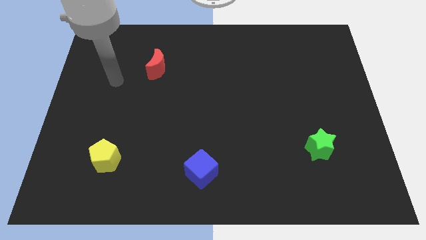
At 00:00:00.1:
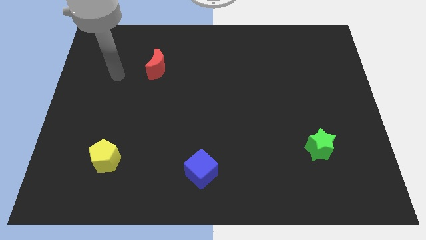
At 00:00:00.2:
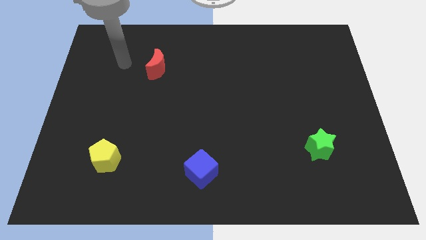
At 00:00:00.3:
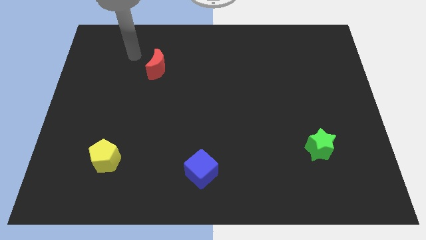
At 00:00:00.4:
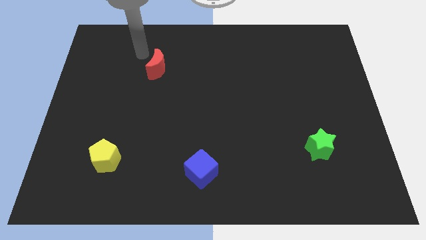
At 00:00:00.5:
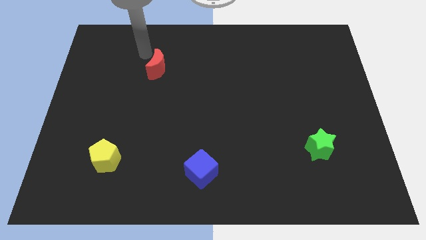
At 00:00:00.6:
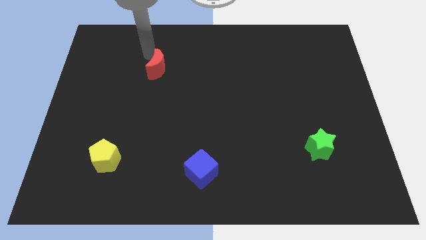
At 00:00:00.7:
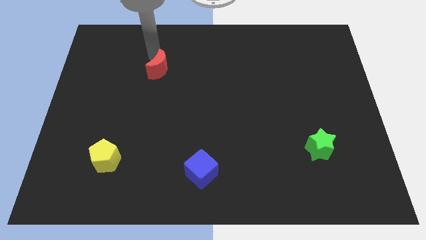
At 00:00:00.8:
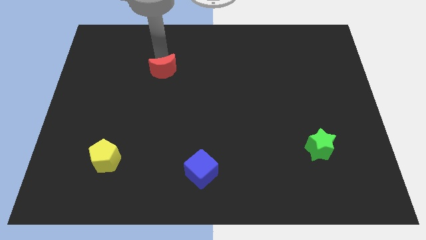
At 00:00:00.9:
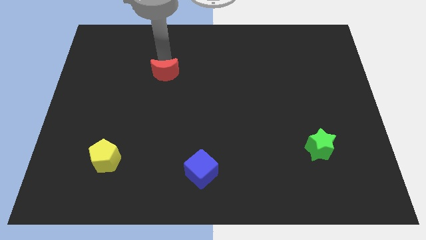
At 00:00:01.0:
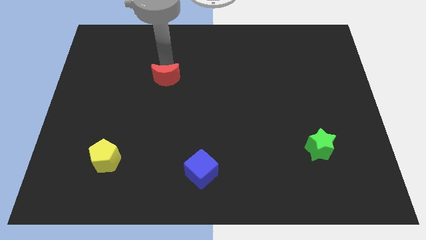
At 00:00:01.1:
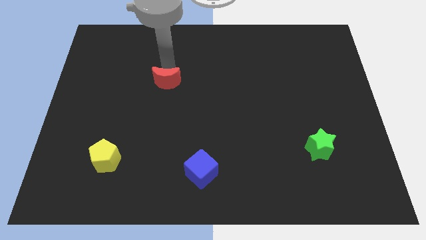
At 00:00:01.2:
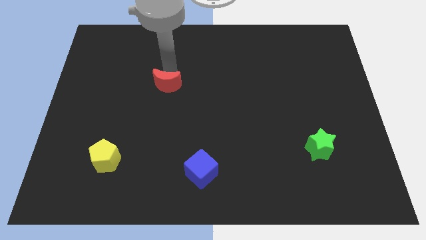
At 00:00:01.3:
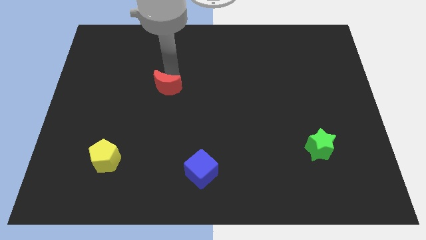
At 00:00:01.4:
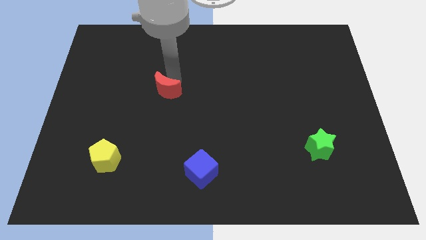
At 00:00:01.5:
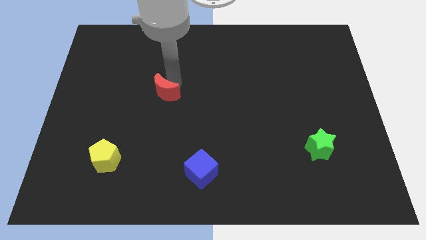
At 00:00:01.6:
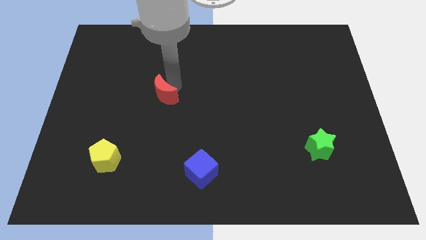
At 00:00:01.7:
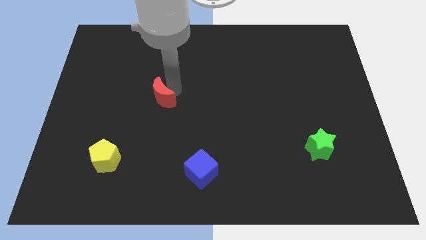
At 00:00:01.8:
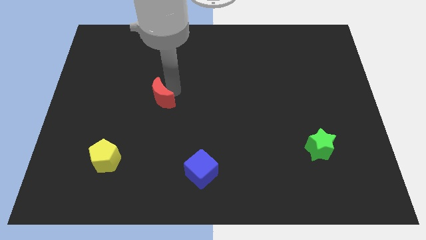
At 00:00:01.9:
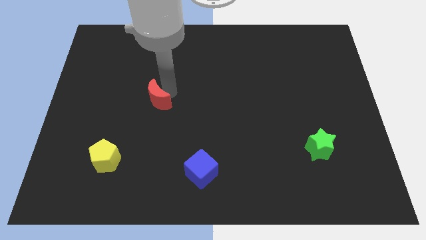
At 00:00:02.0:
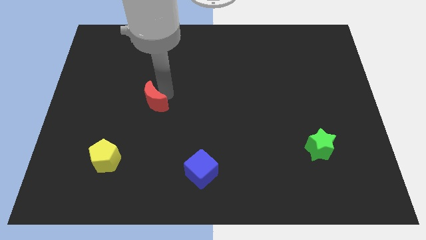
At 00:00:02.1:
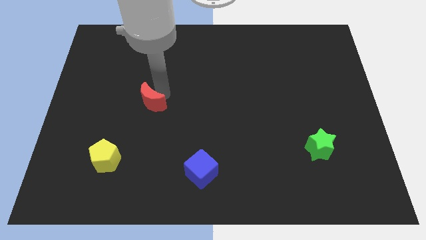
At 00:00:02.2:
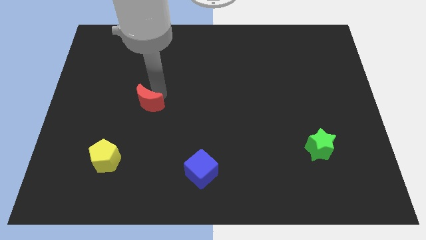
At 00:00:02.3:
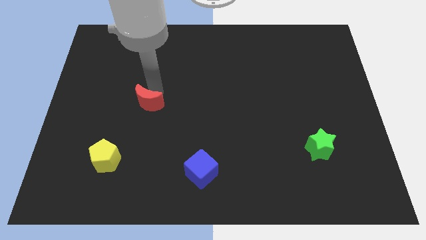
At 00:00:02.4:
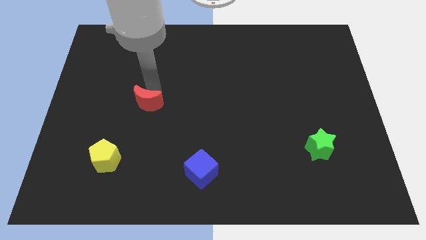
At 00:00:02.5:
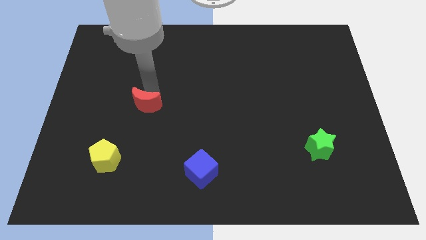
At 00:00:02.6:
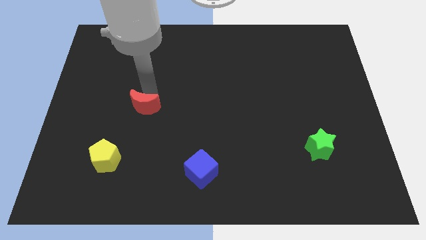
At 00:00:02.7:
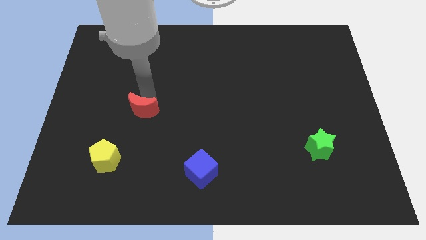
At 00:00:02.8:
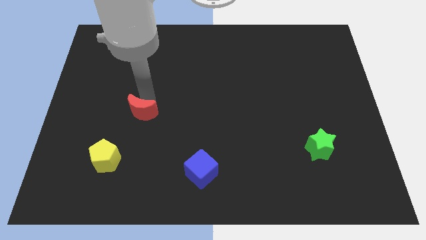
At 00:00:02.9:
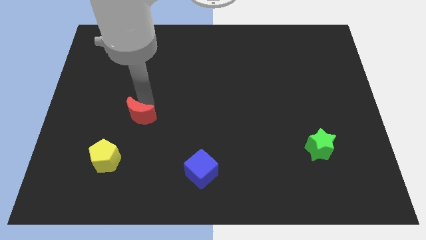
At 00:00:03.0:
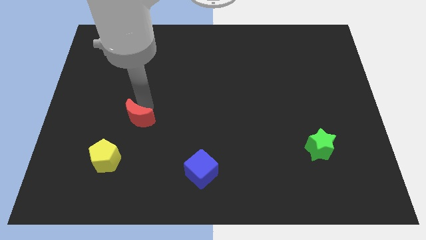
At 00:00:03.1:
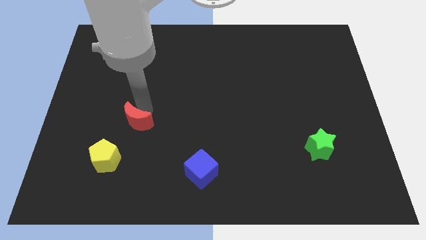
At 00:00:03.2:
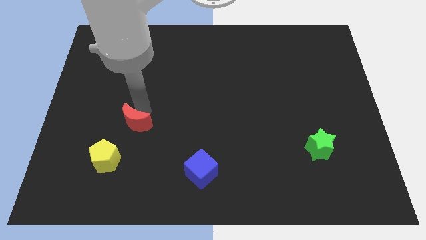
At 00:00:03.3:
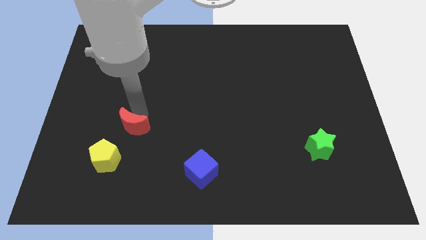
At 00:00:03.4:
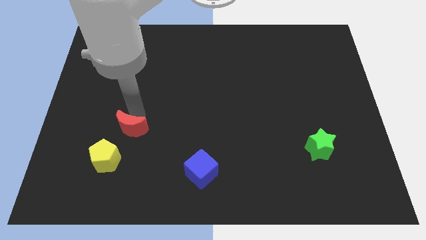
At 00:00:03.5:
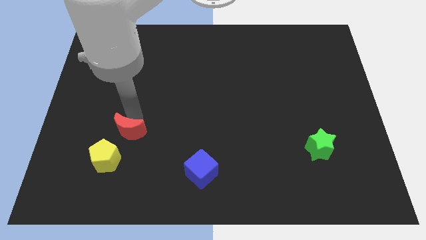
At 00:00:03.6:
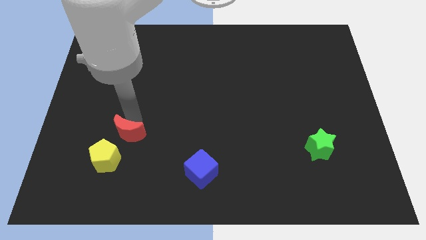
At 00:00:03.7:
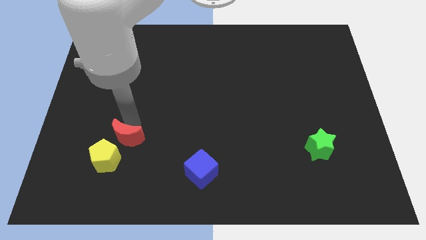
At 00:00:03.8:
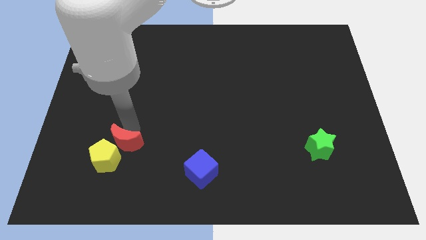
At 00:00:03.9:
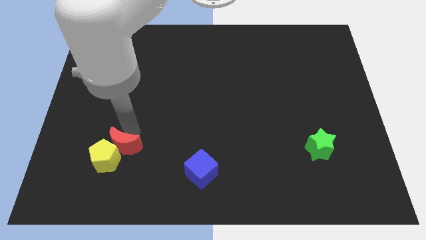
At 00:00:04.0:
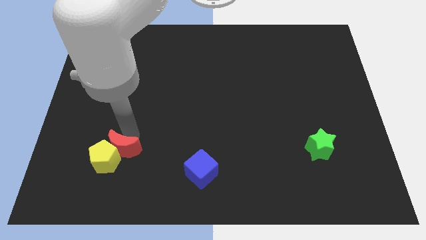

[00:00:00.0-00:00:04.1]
put the red moon close to the yellow block

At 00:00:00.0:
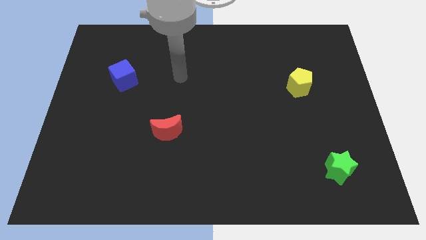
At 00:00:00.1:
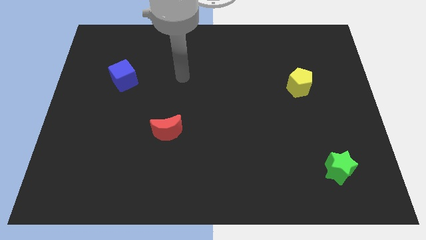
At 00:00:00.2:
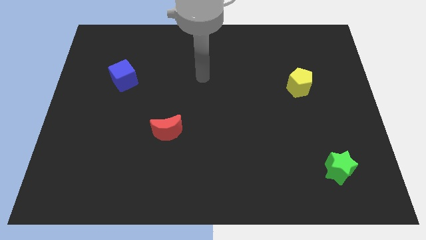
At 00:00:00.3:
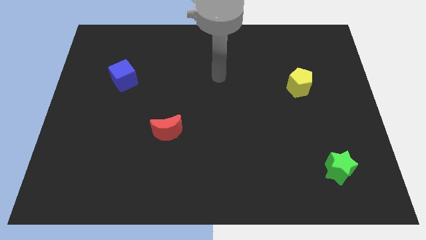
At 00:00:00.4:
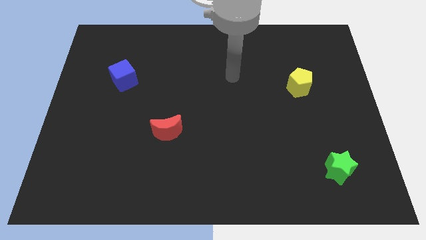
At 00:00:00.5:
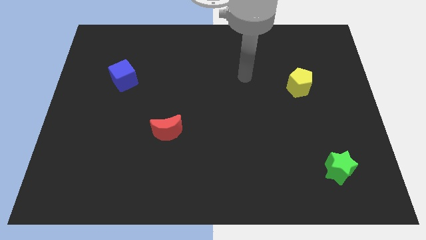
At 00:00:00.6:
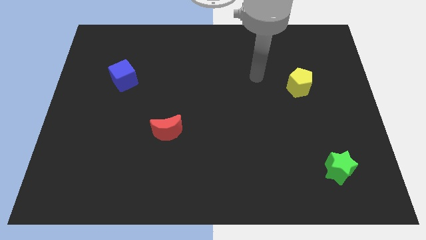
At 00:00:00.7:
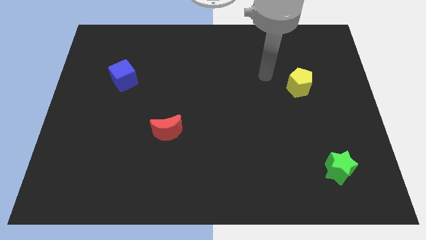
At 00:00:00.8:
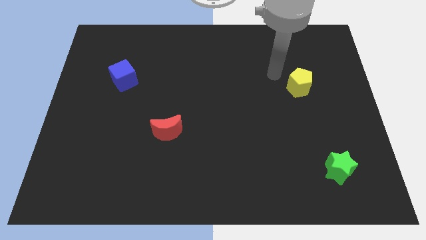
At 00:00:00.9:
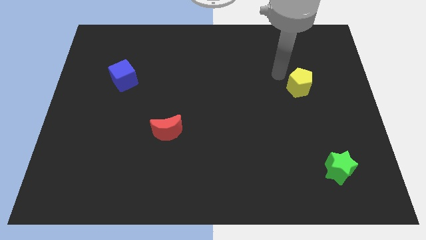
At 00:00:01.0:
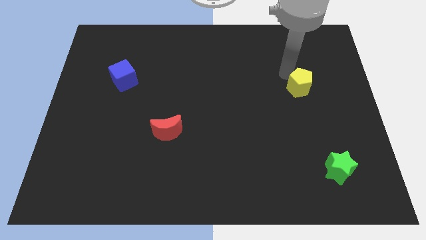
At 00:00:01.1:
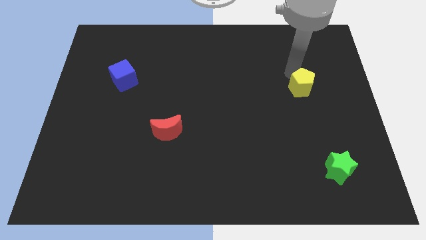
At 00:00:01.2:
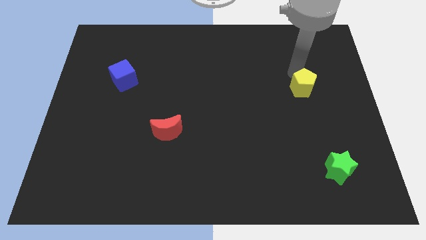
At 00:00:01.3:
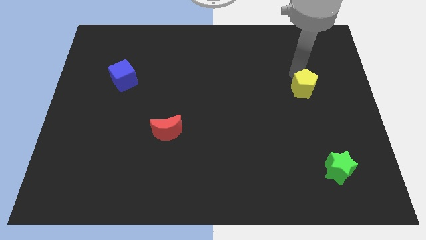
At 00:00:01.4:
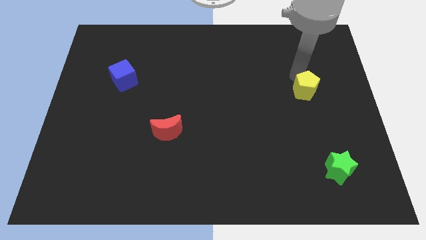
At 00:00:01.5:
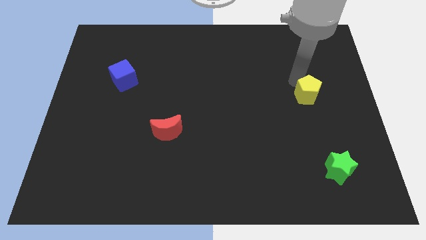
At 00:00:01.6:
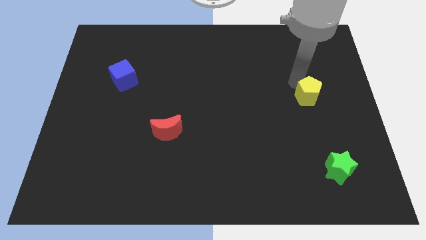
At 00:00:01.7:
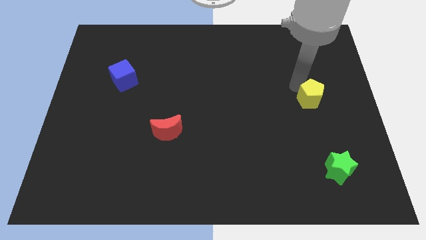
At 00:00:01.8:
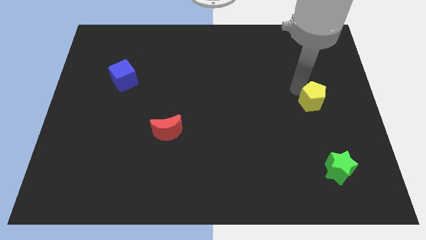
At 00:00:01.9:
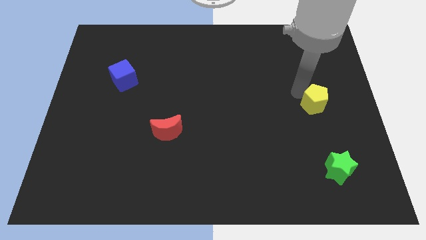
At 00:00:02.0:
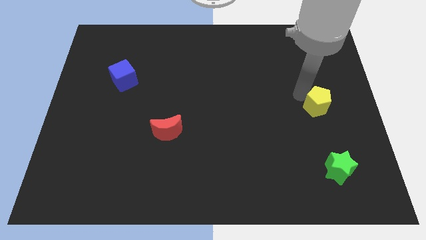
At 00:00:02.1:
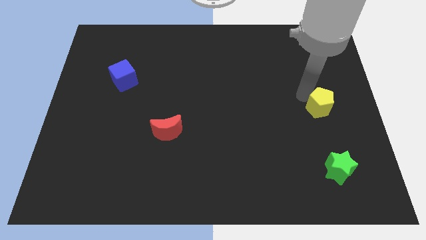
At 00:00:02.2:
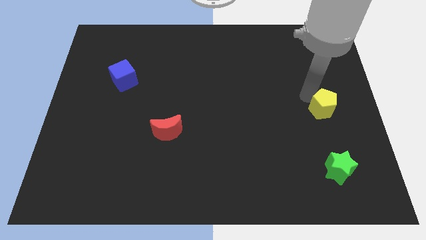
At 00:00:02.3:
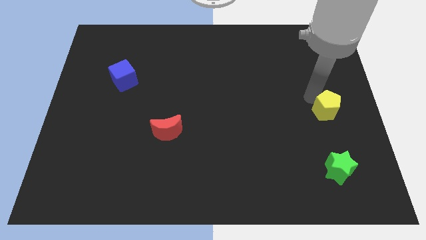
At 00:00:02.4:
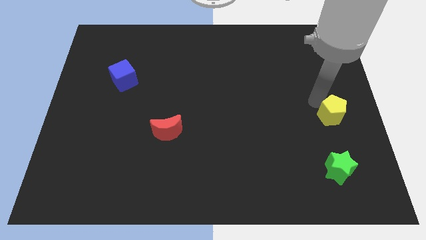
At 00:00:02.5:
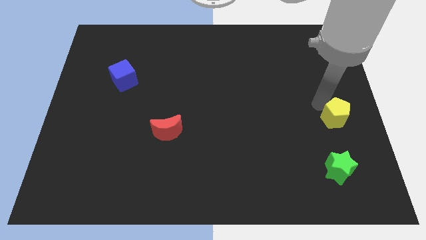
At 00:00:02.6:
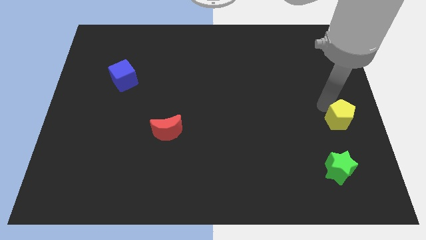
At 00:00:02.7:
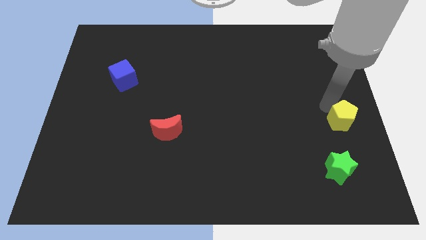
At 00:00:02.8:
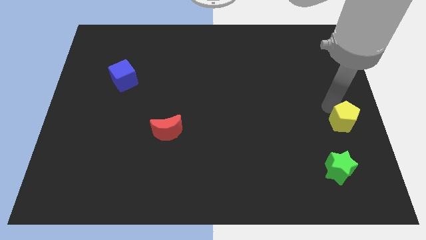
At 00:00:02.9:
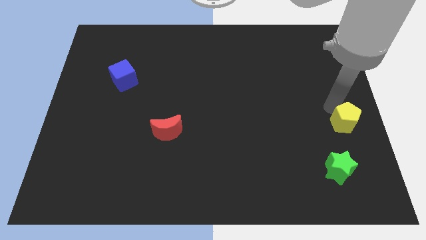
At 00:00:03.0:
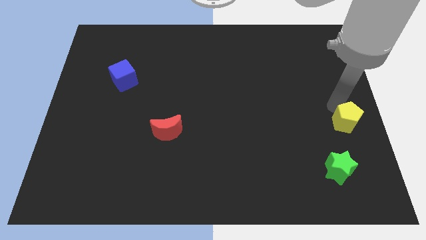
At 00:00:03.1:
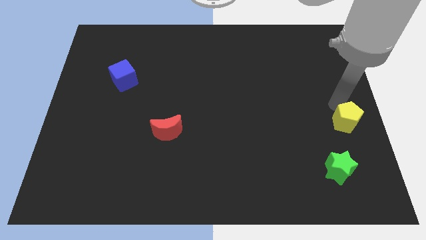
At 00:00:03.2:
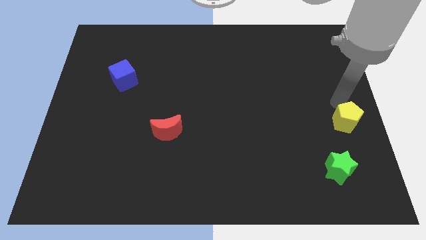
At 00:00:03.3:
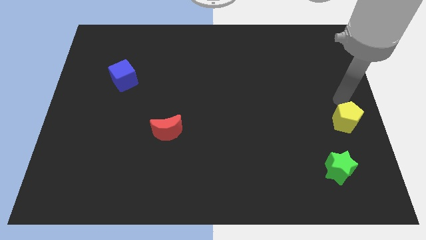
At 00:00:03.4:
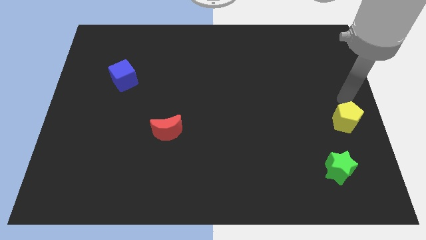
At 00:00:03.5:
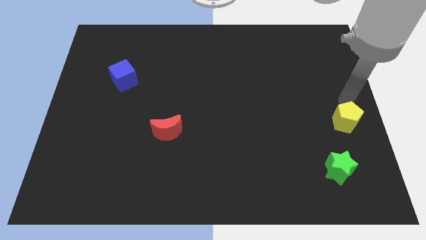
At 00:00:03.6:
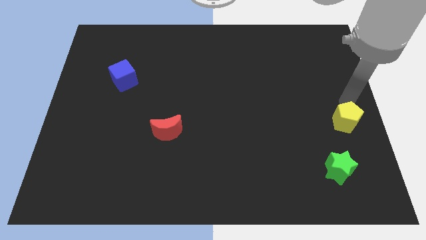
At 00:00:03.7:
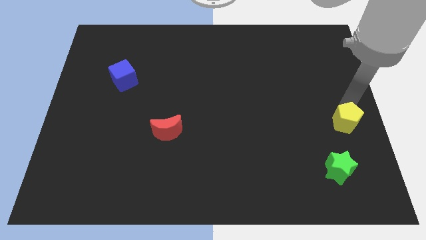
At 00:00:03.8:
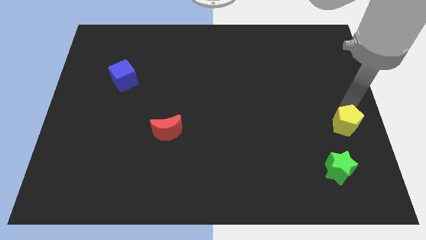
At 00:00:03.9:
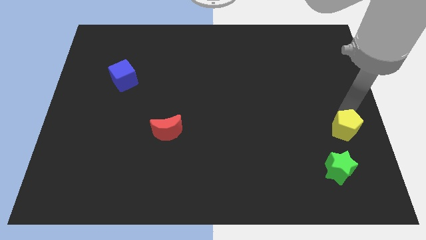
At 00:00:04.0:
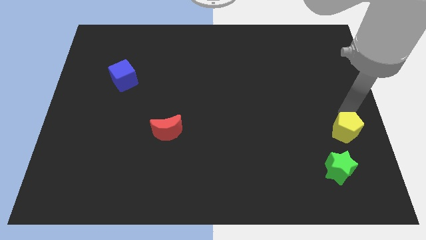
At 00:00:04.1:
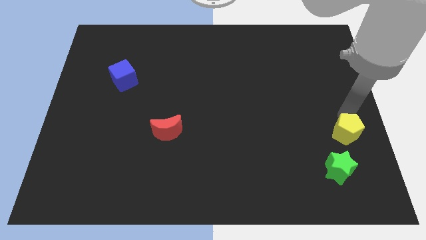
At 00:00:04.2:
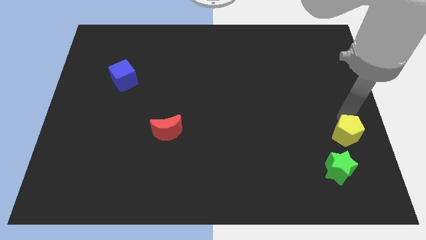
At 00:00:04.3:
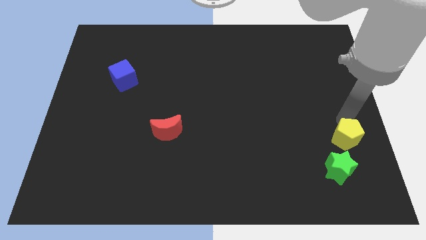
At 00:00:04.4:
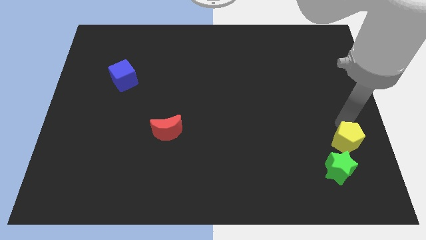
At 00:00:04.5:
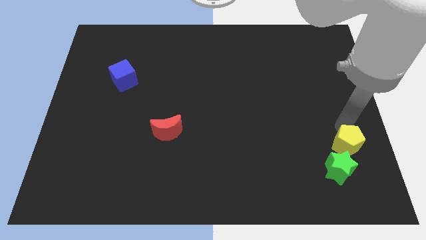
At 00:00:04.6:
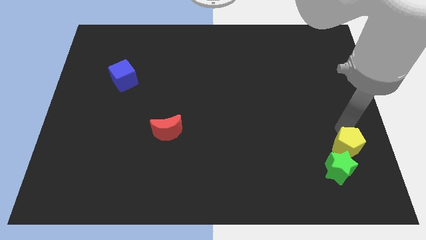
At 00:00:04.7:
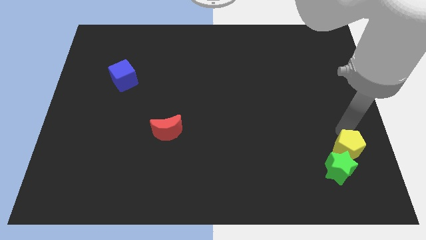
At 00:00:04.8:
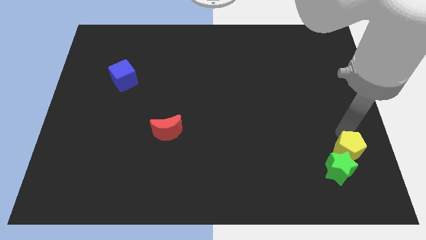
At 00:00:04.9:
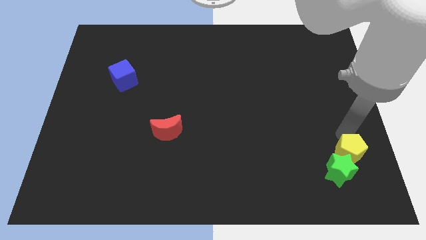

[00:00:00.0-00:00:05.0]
put the yellow pentagon to the green star
